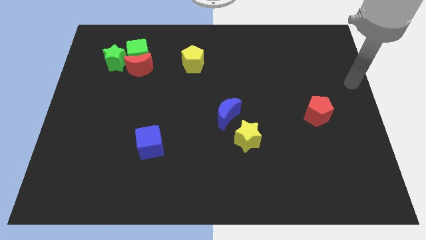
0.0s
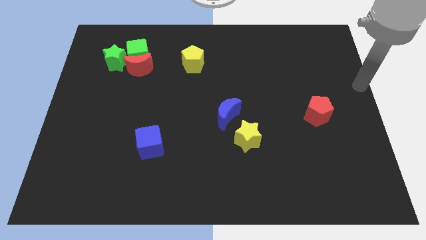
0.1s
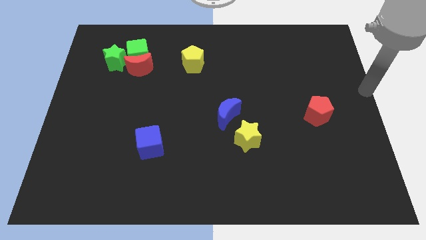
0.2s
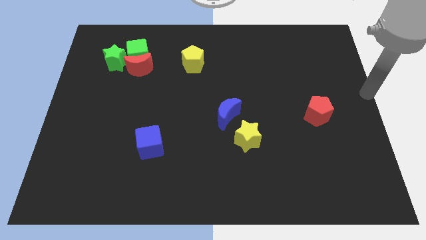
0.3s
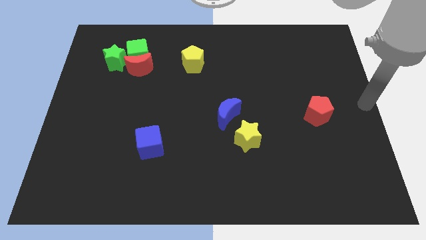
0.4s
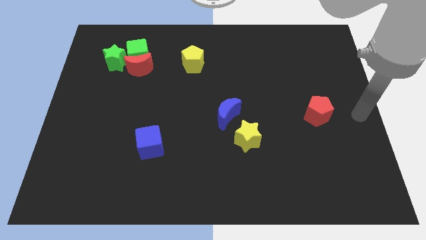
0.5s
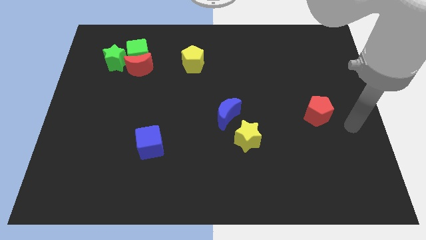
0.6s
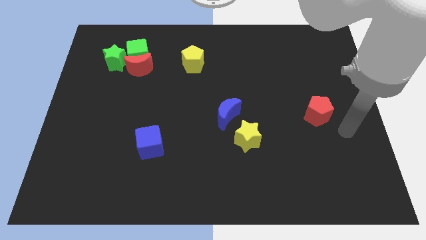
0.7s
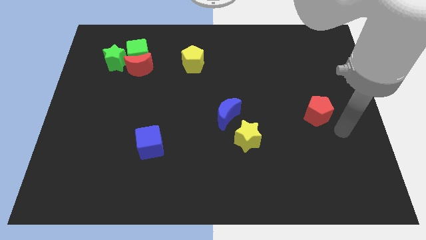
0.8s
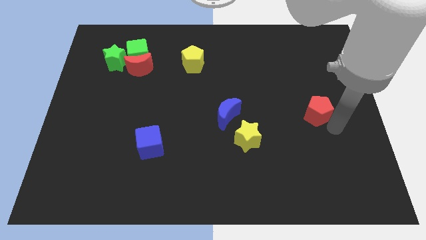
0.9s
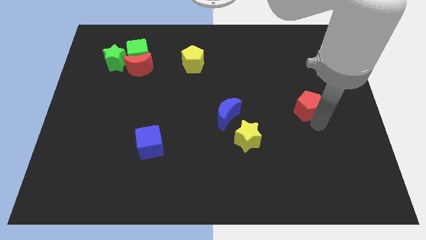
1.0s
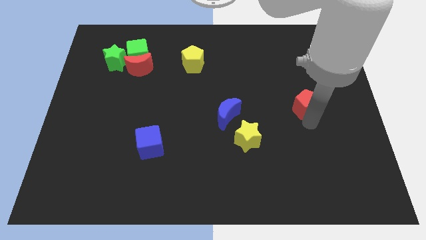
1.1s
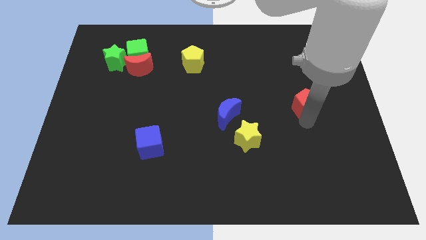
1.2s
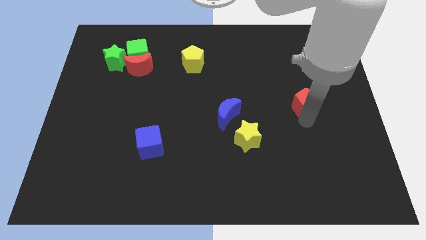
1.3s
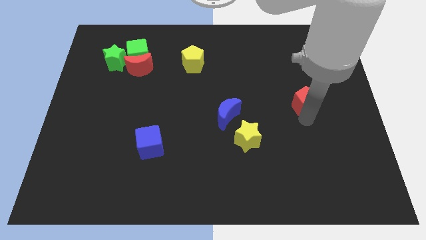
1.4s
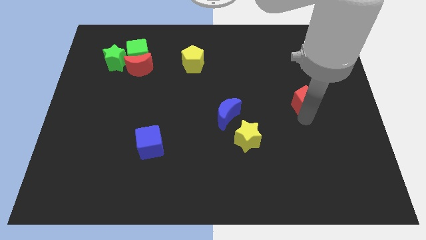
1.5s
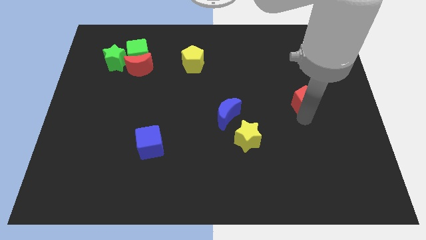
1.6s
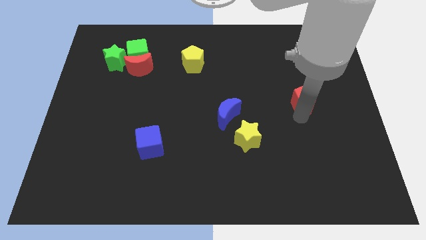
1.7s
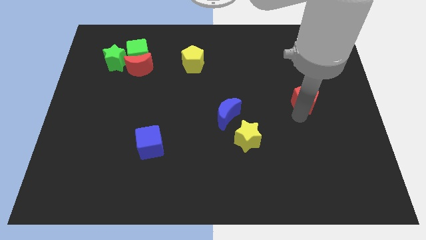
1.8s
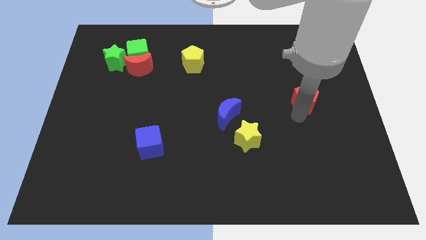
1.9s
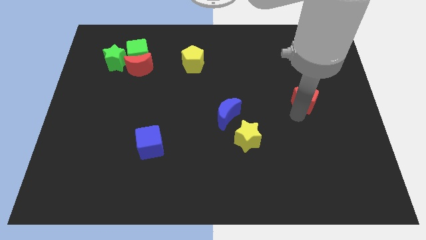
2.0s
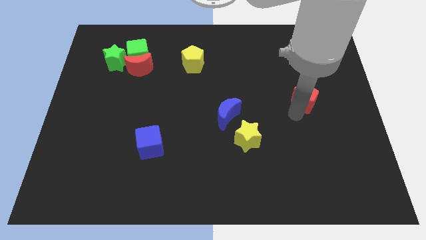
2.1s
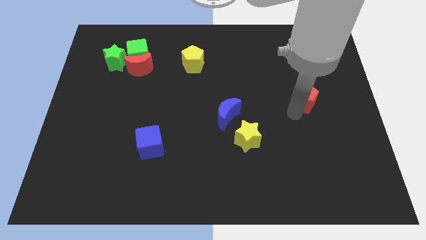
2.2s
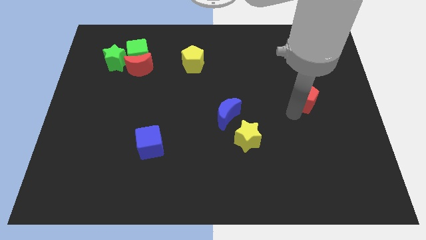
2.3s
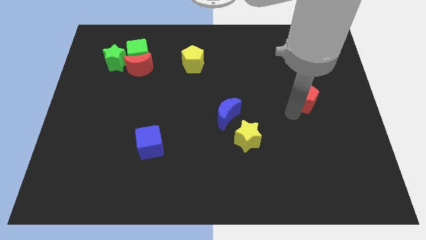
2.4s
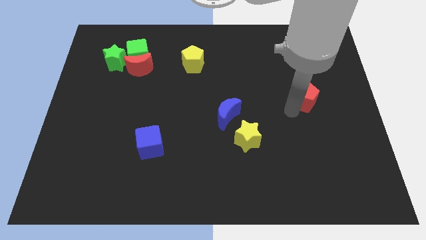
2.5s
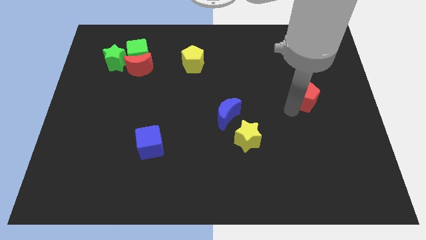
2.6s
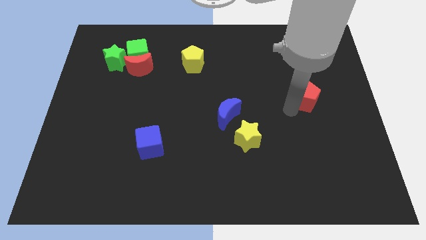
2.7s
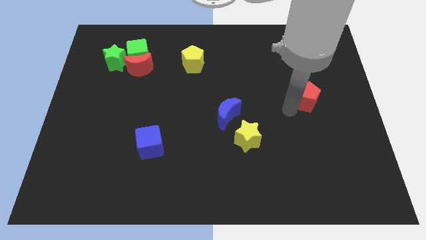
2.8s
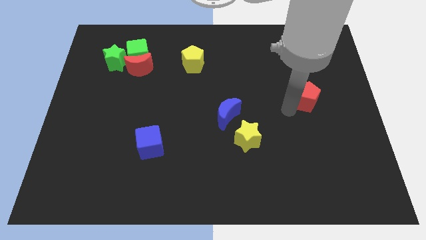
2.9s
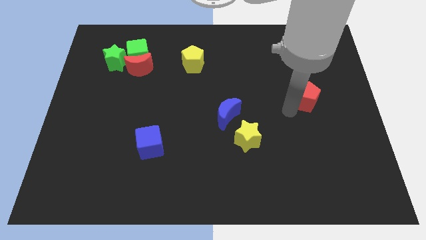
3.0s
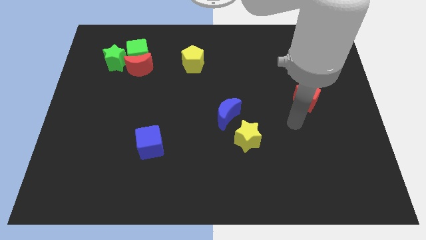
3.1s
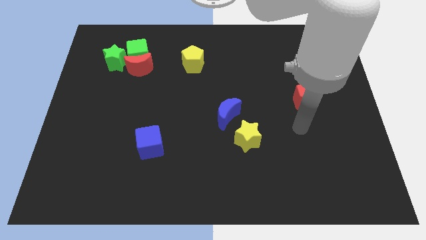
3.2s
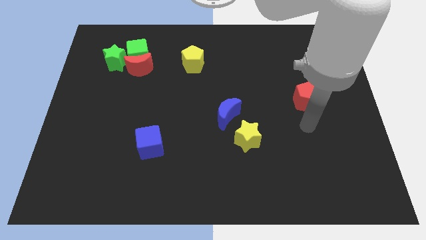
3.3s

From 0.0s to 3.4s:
move the red pentagon at the top right side of the yellow star

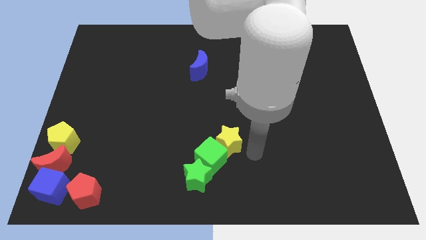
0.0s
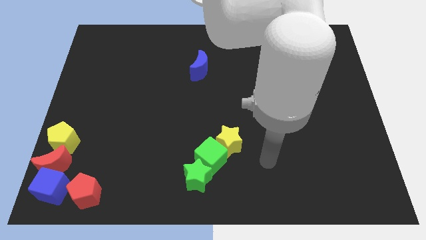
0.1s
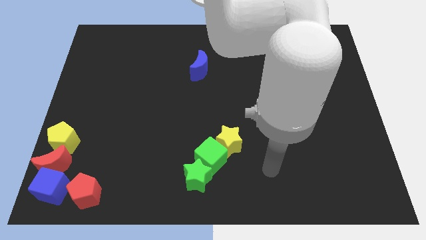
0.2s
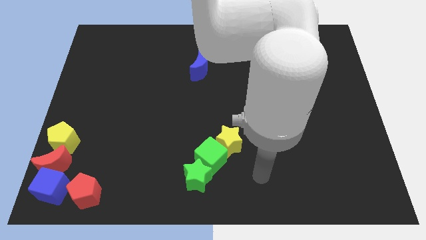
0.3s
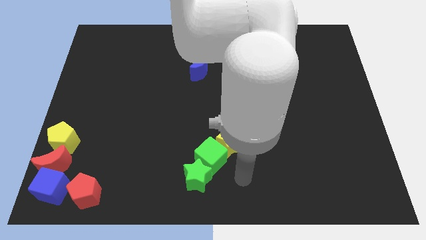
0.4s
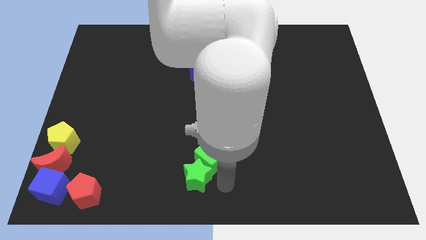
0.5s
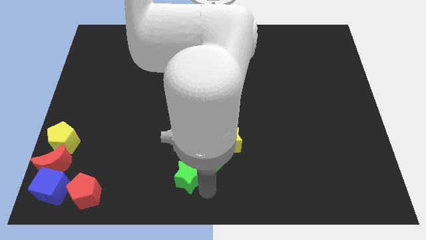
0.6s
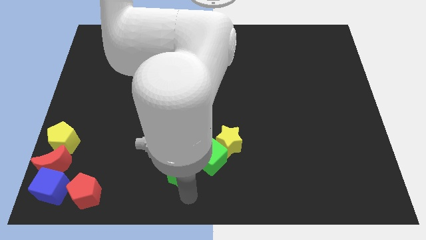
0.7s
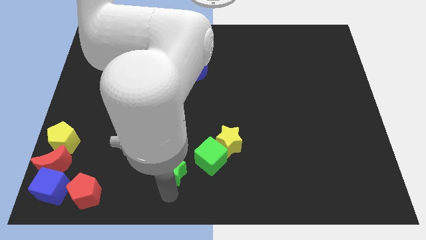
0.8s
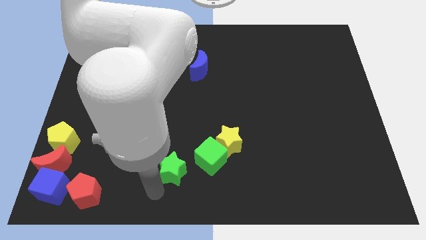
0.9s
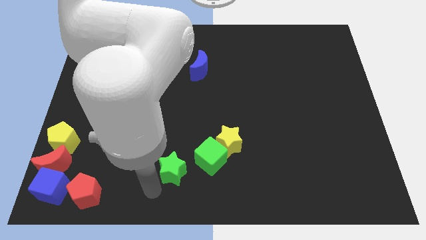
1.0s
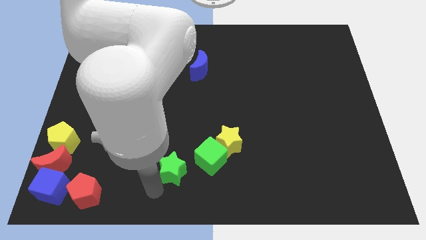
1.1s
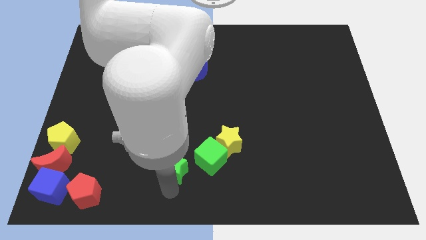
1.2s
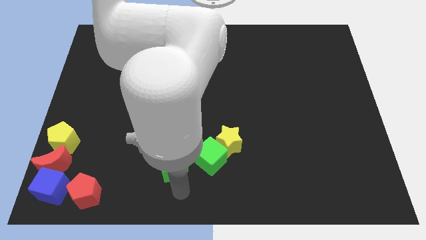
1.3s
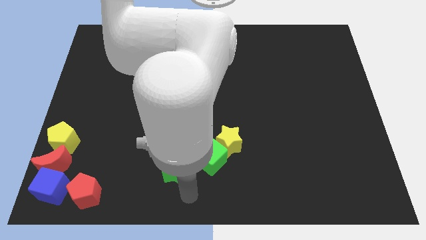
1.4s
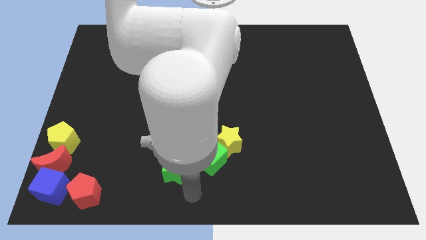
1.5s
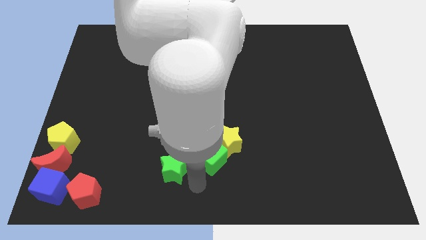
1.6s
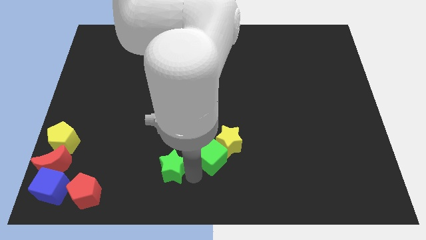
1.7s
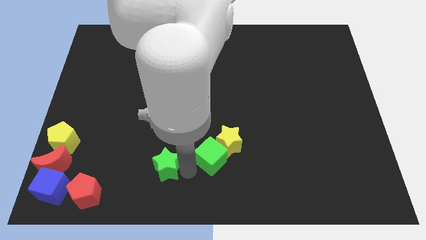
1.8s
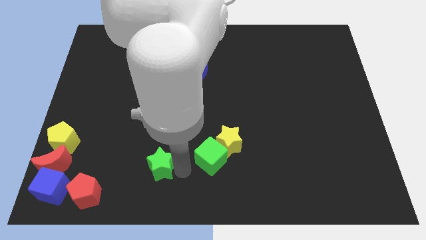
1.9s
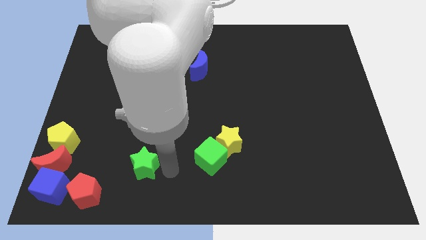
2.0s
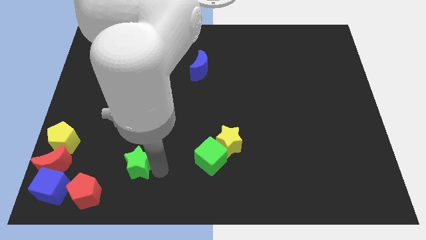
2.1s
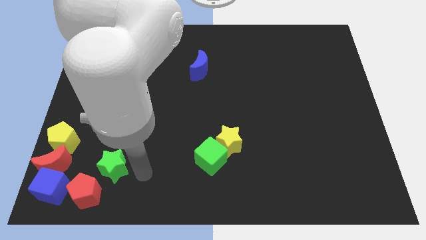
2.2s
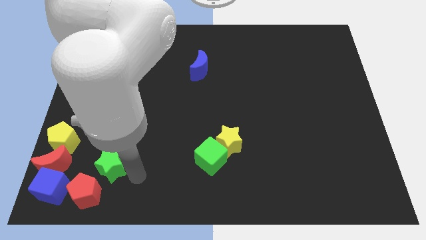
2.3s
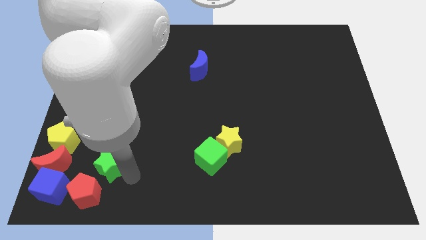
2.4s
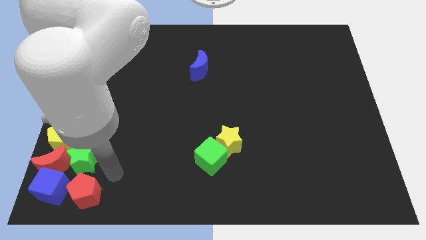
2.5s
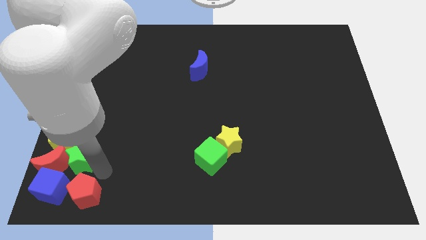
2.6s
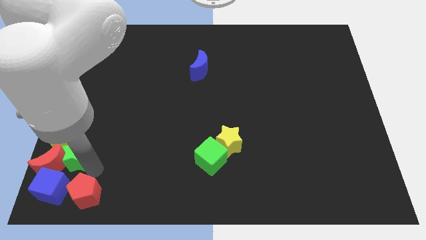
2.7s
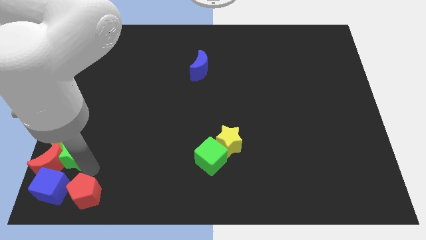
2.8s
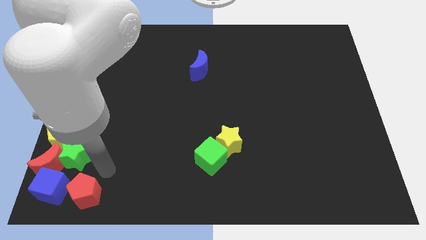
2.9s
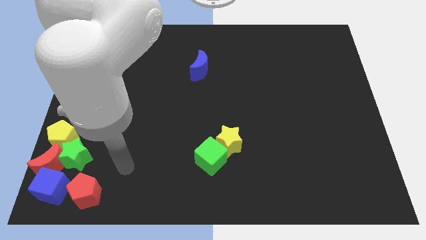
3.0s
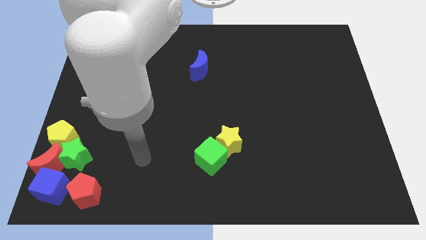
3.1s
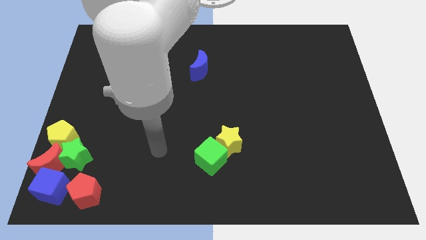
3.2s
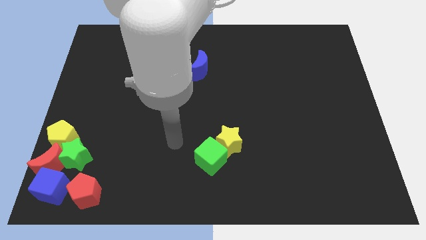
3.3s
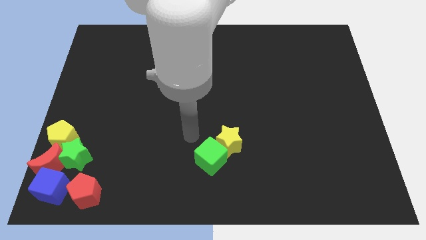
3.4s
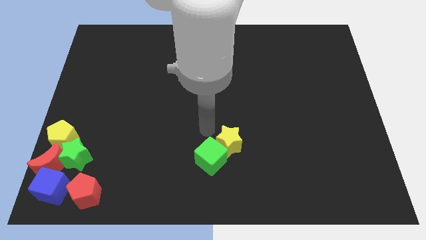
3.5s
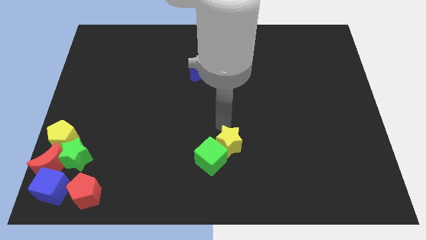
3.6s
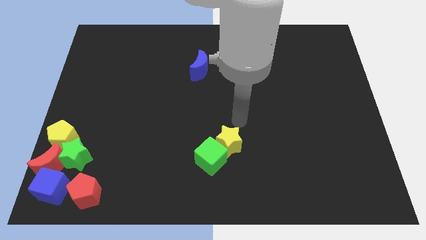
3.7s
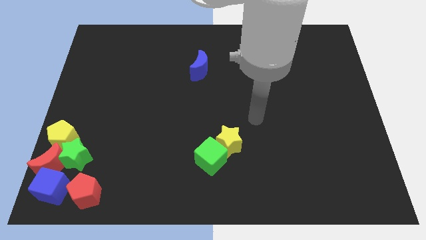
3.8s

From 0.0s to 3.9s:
move green star to the top of red crescent

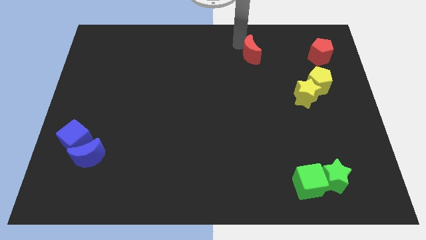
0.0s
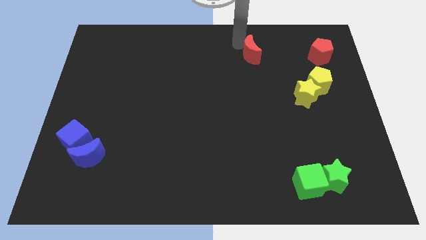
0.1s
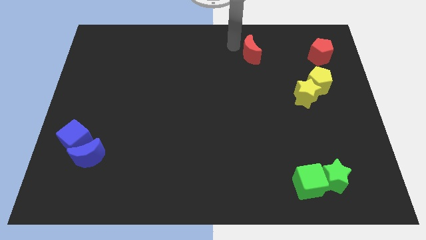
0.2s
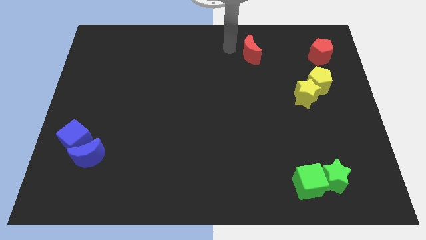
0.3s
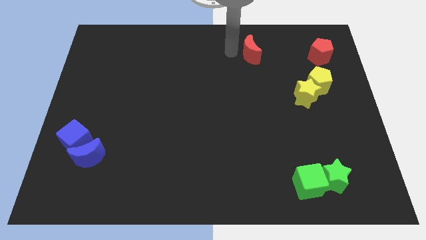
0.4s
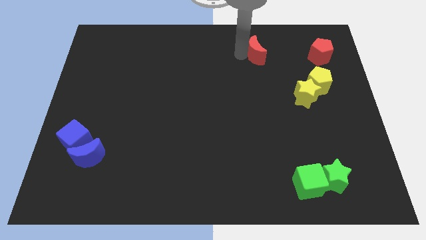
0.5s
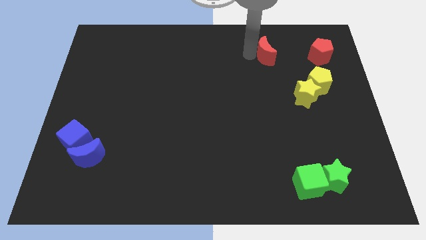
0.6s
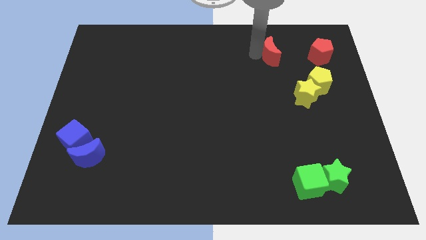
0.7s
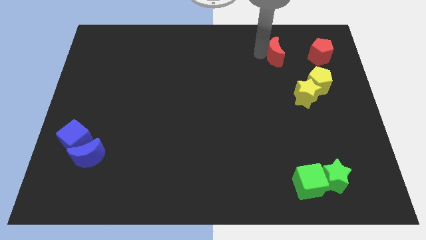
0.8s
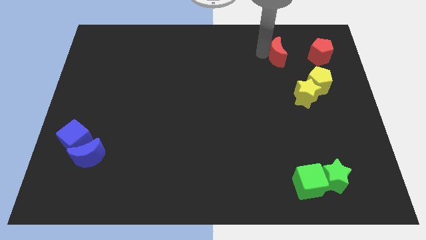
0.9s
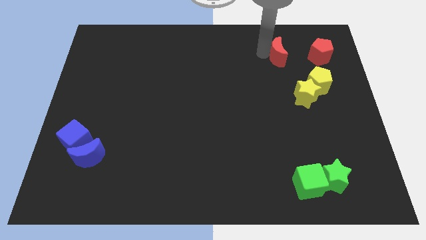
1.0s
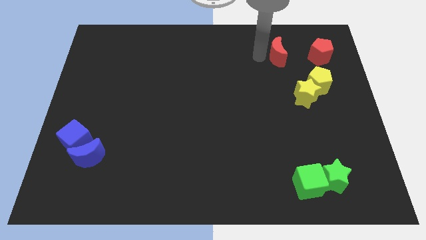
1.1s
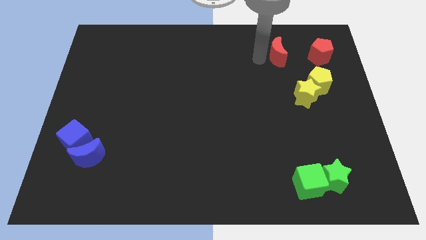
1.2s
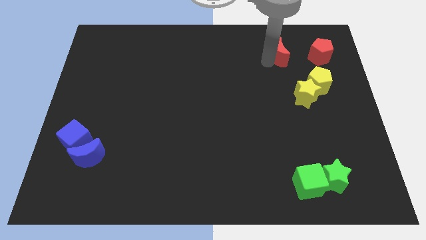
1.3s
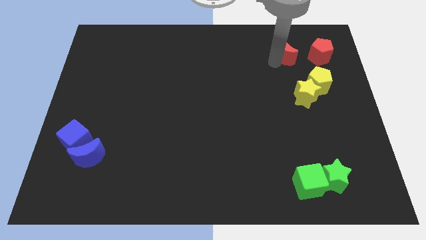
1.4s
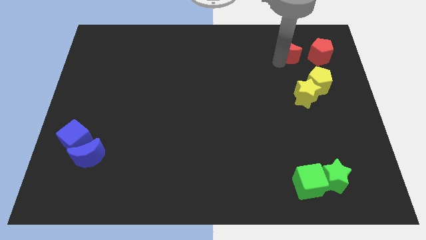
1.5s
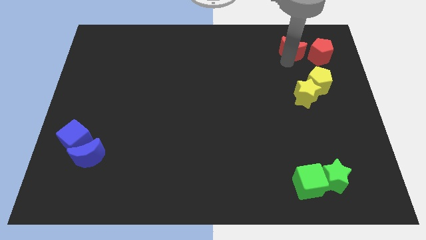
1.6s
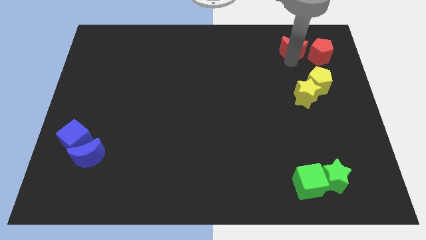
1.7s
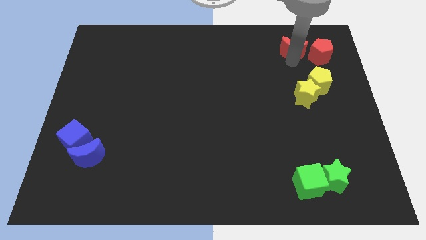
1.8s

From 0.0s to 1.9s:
move the red moon beside the red pentagon
